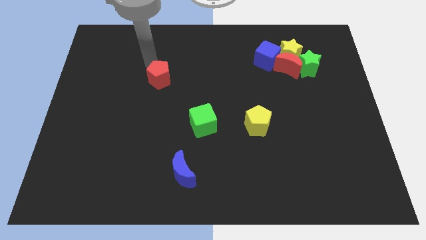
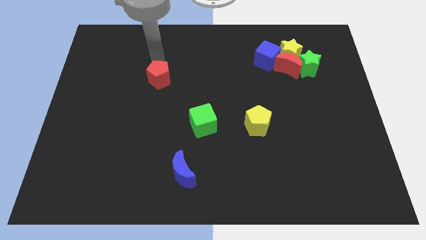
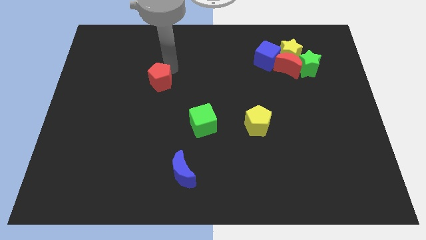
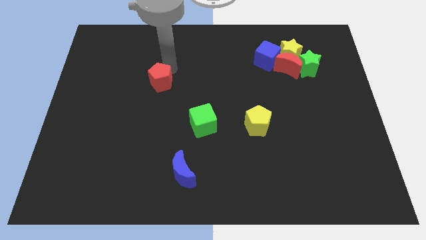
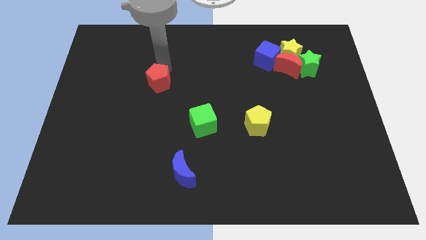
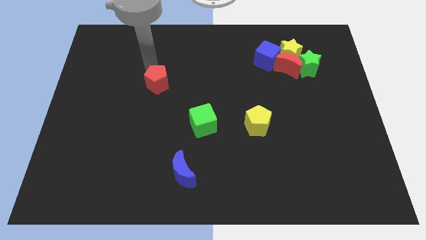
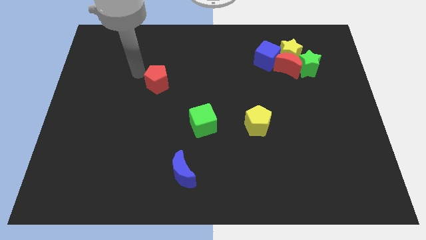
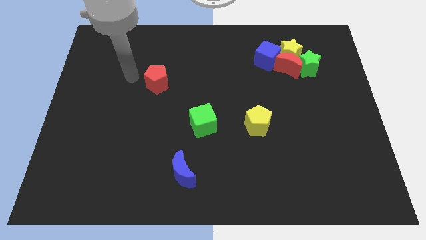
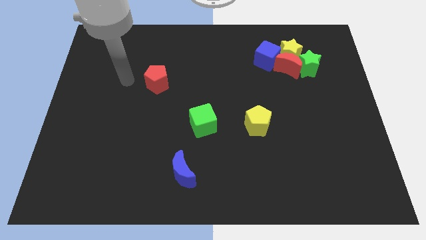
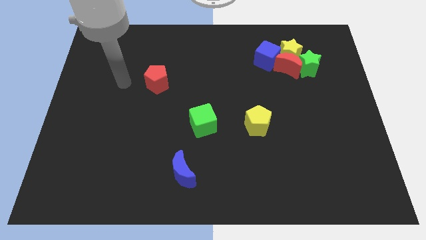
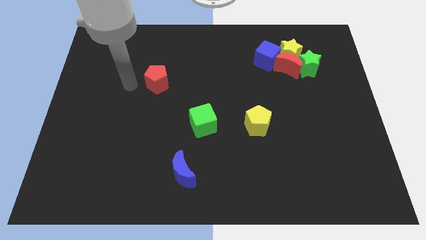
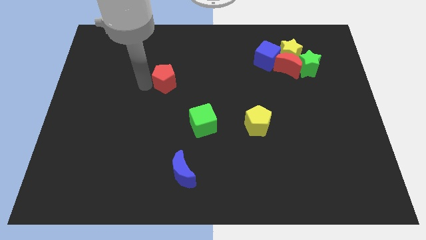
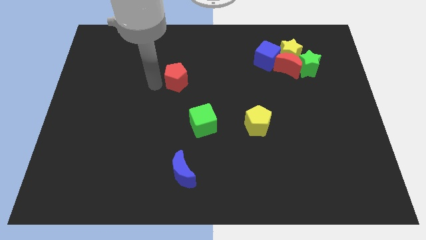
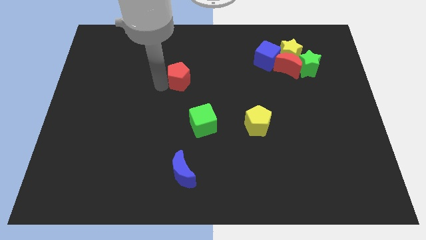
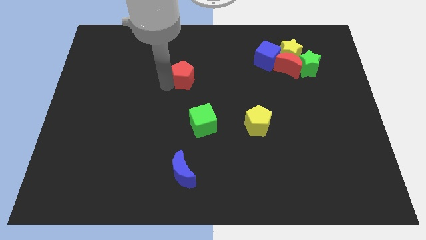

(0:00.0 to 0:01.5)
drag the red pentagon towards the right

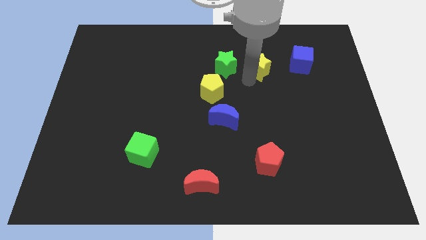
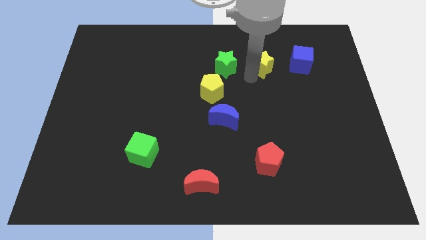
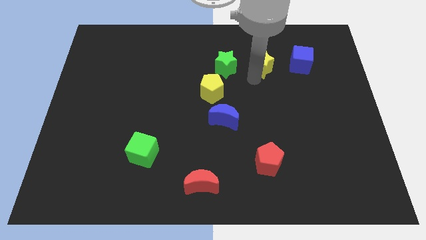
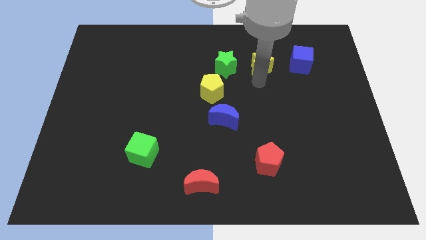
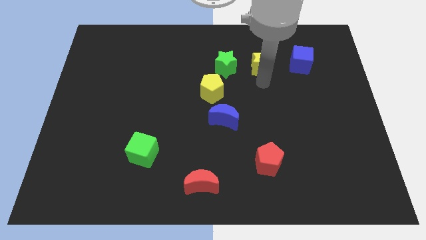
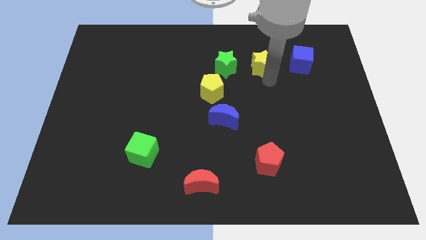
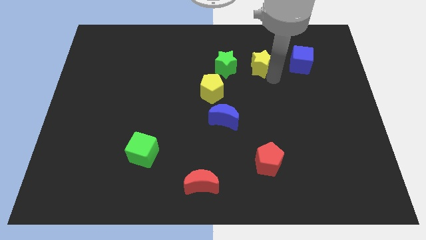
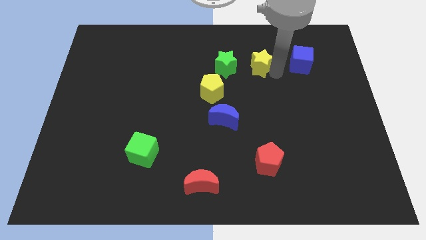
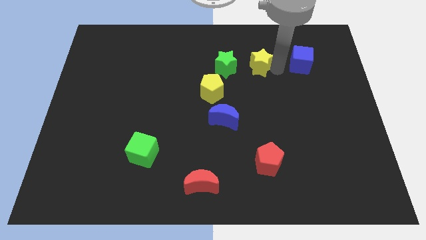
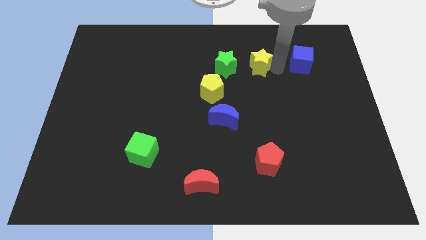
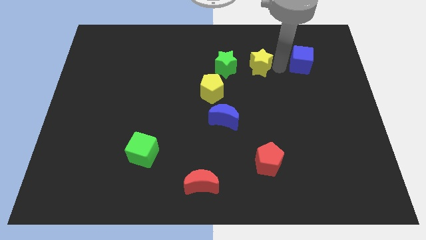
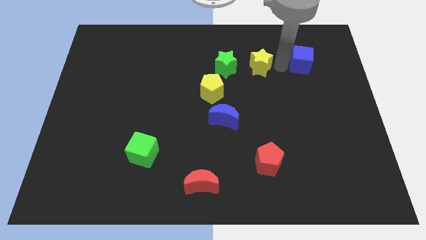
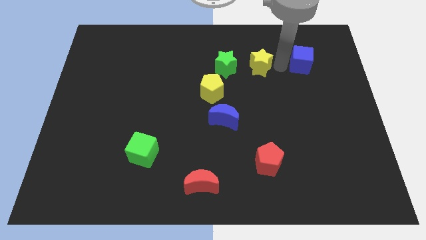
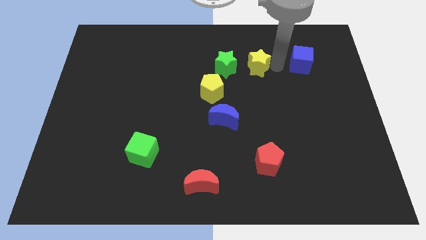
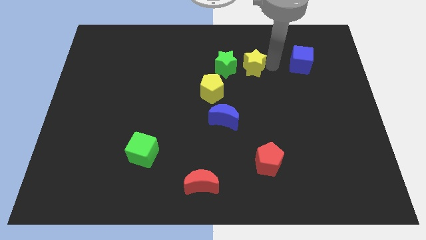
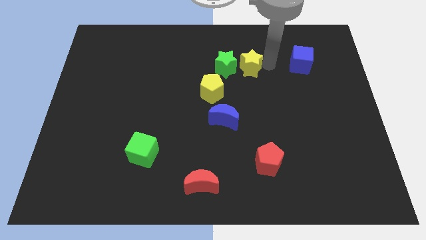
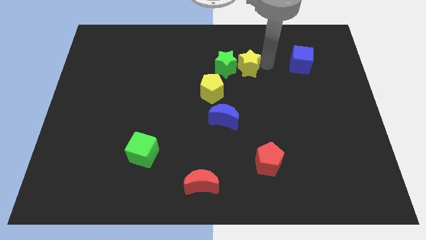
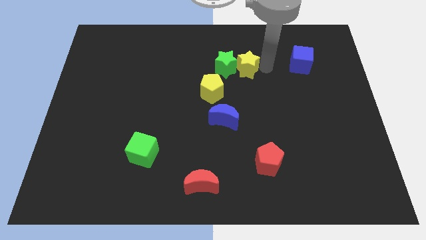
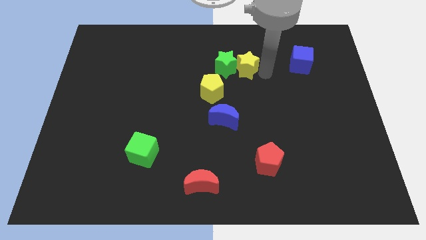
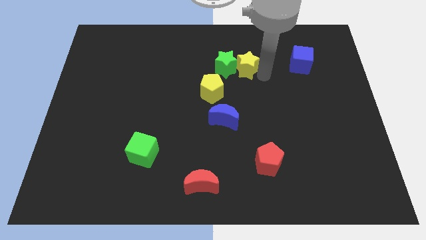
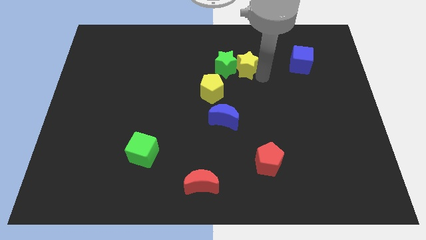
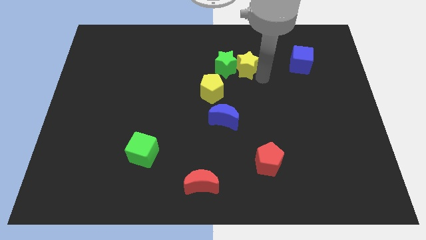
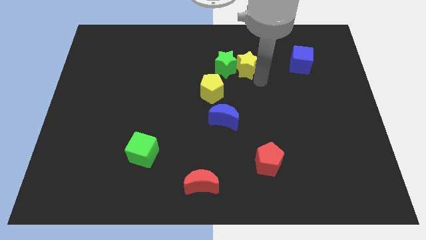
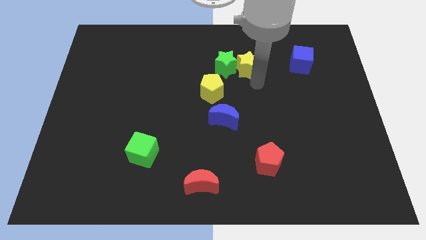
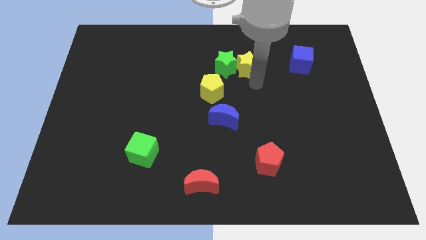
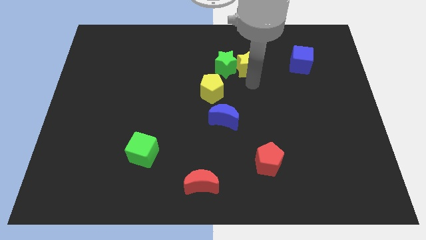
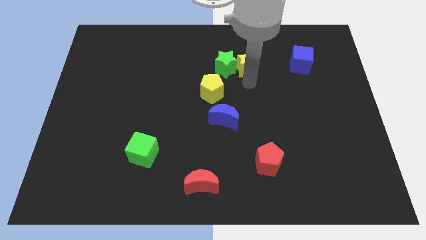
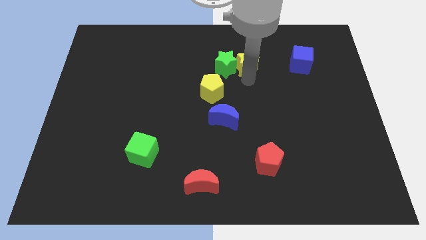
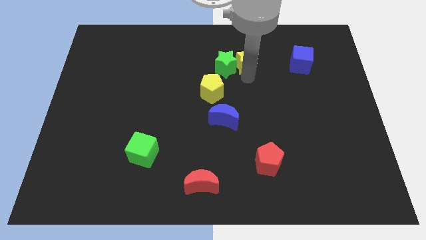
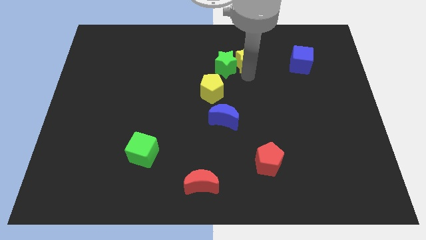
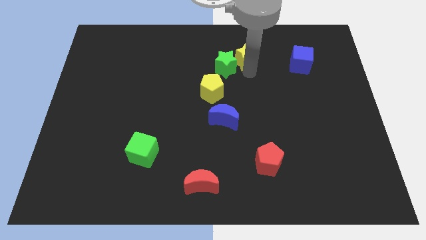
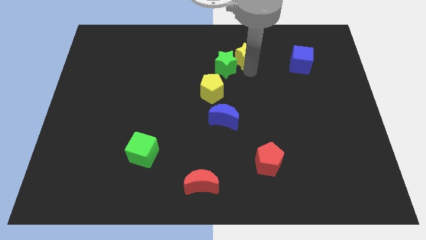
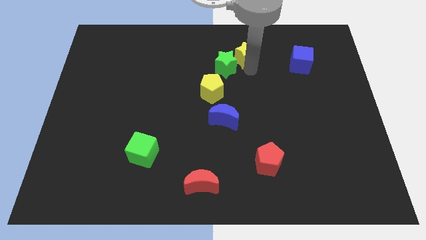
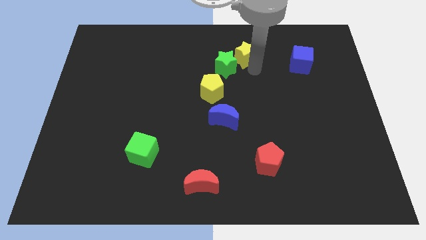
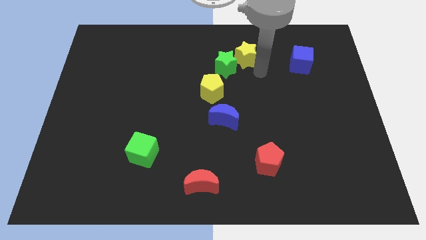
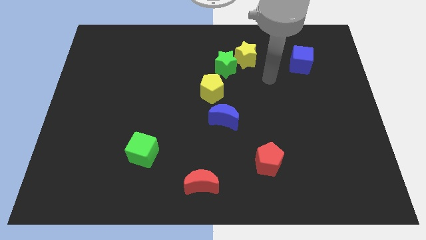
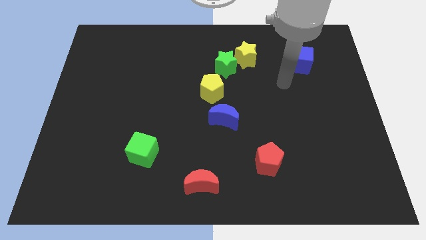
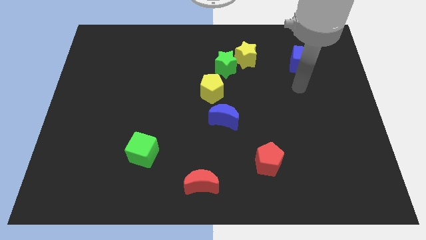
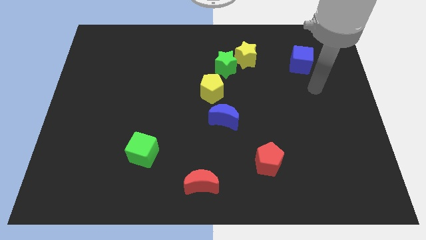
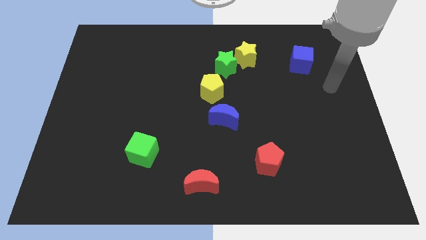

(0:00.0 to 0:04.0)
move yellow star slightly up

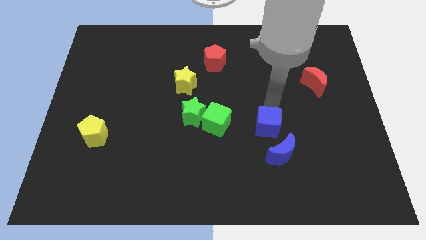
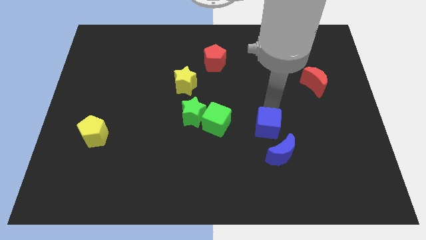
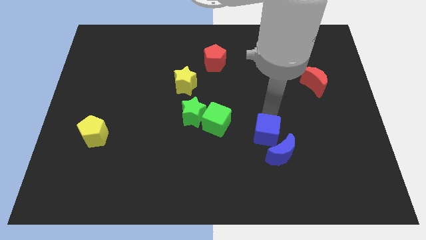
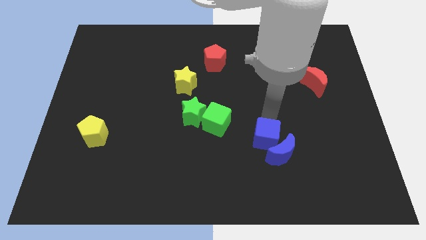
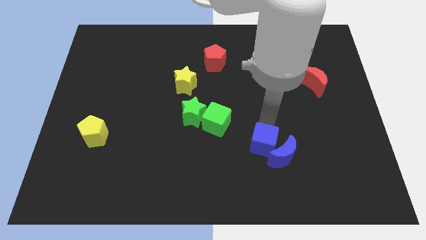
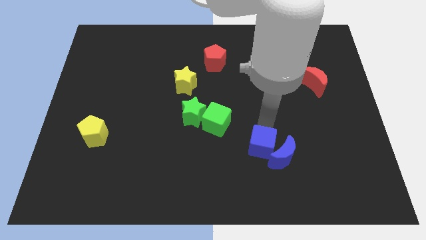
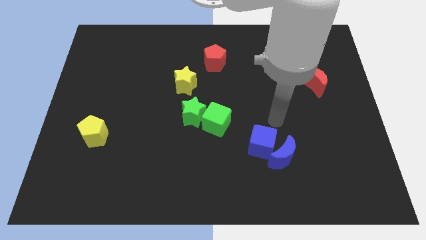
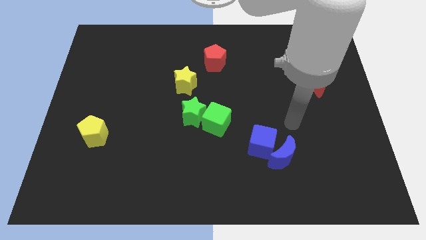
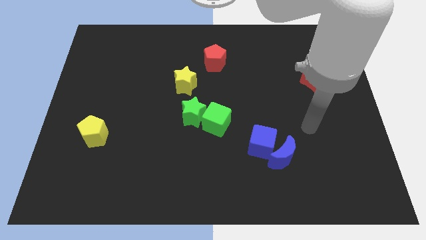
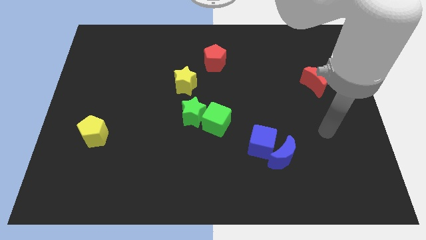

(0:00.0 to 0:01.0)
push the blue cube left to the blue moon

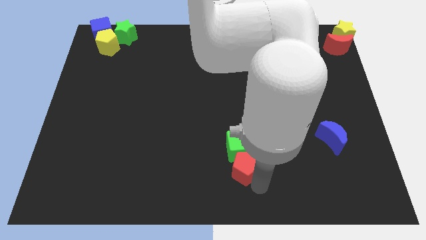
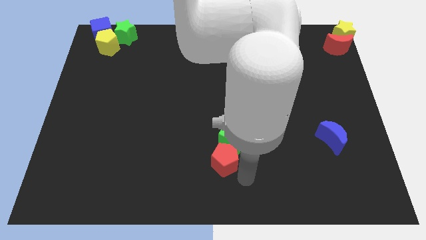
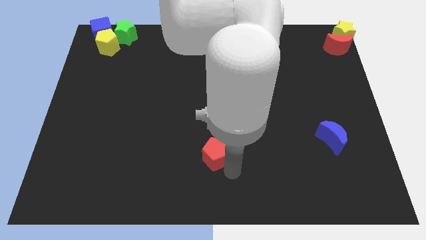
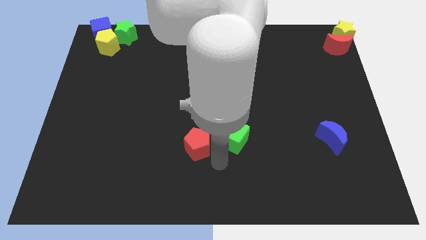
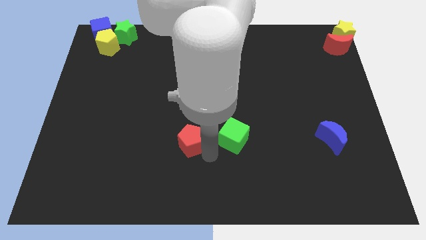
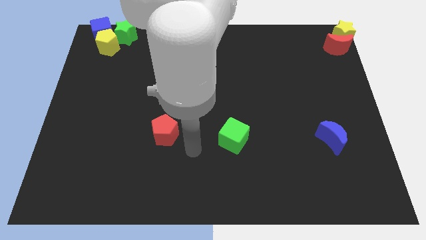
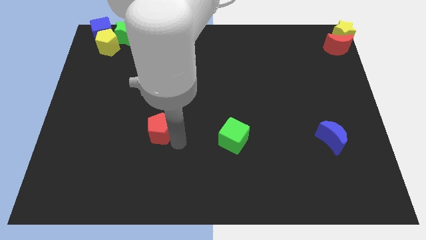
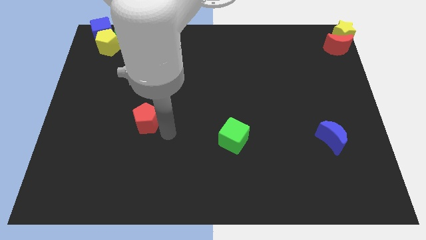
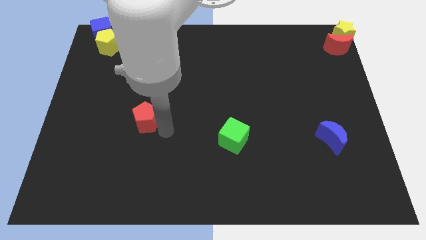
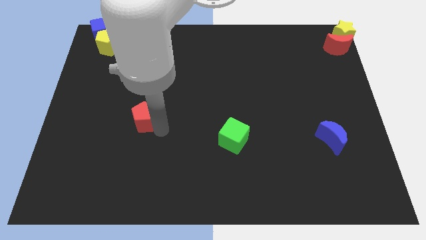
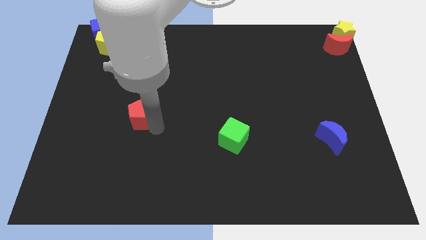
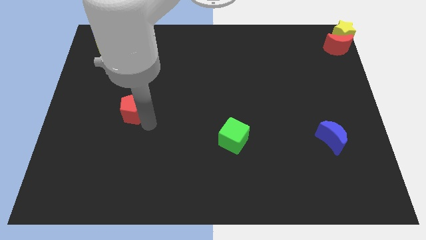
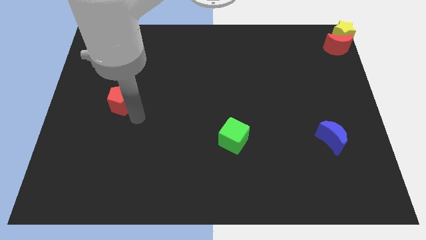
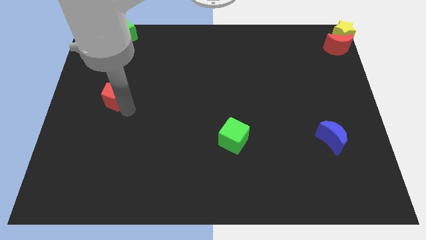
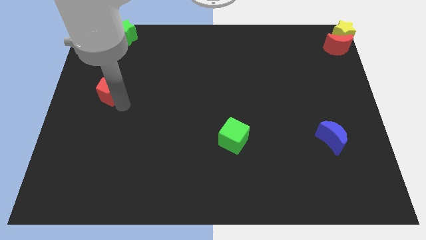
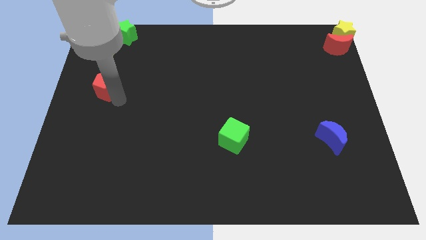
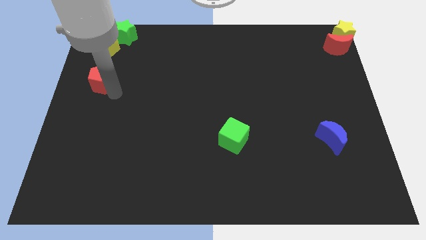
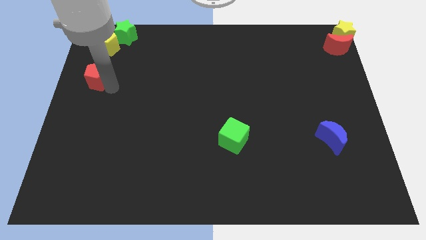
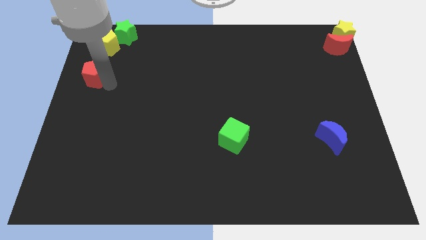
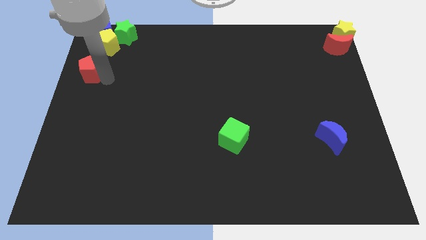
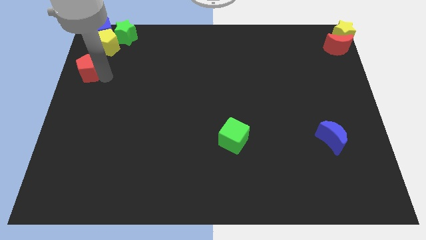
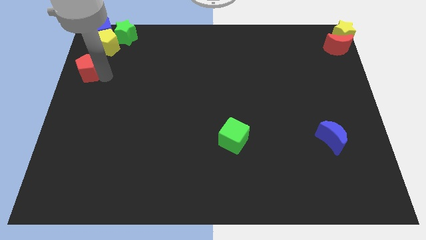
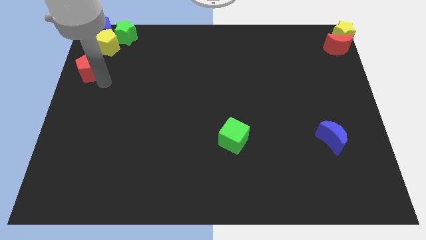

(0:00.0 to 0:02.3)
push the red pentagon diagonal to the yellow pentagon

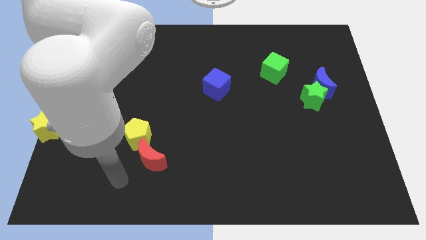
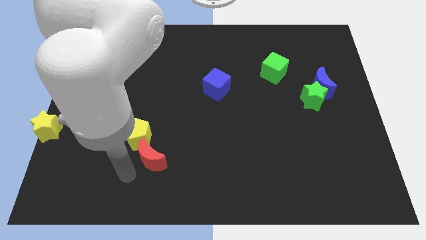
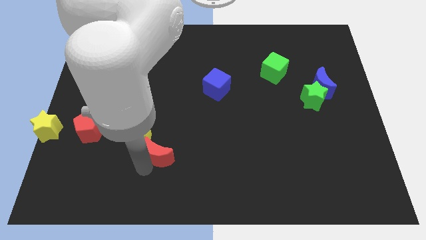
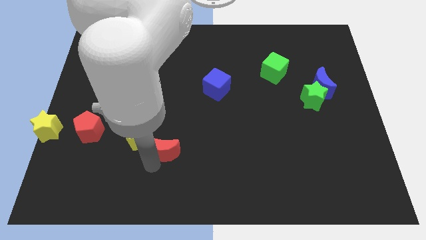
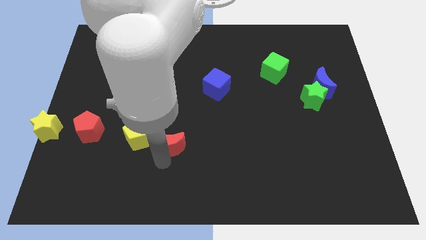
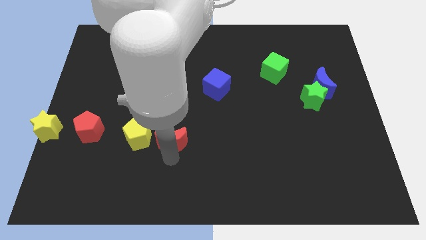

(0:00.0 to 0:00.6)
push yellow pentagon right to yellow pentagon
